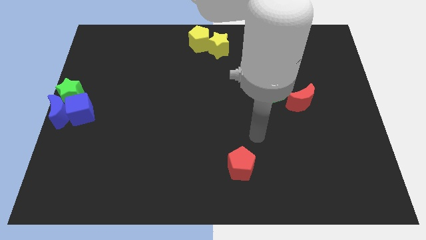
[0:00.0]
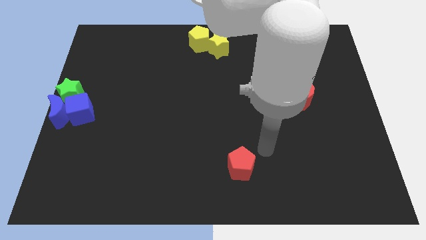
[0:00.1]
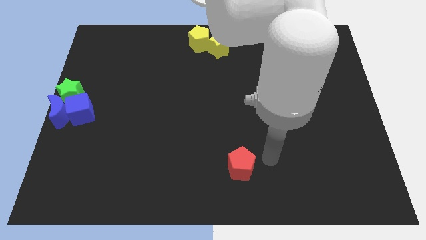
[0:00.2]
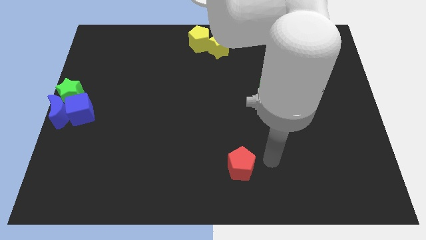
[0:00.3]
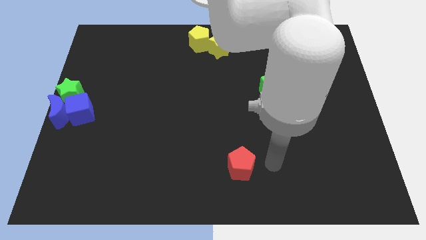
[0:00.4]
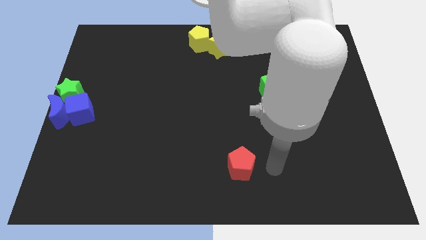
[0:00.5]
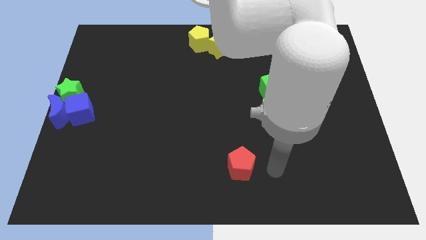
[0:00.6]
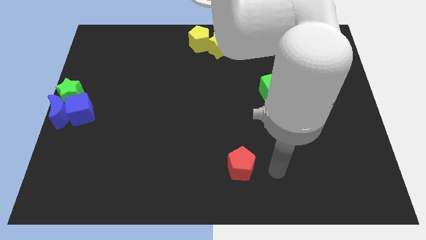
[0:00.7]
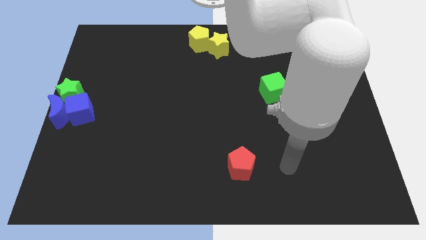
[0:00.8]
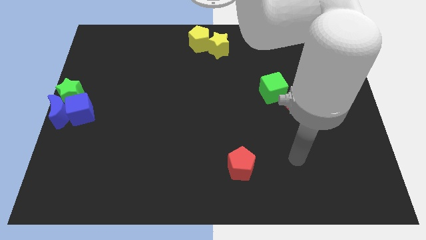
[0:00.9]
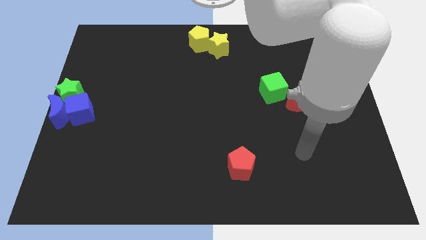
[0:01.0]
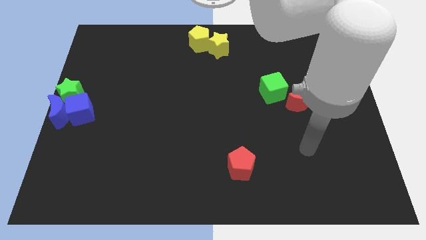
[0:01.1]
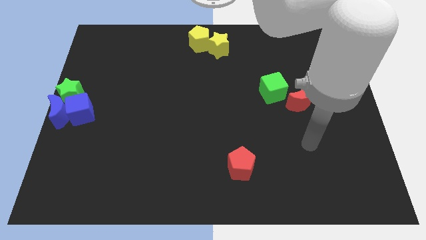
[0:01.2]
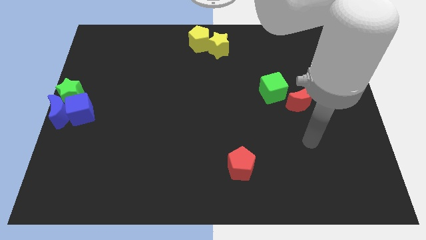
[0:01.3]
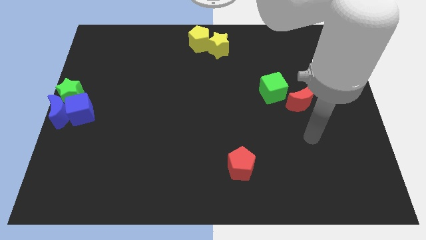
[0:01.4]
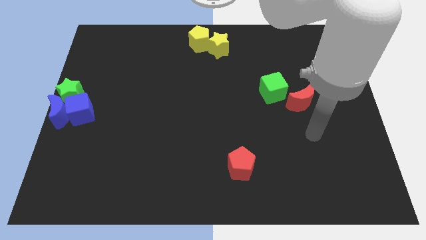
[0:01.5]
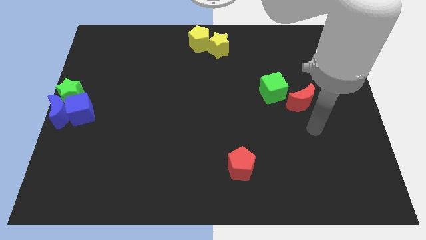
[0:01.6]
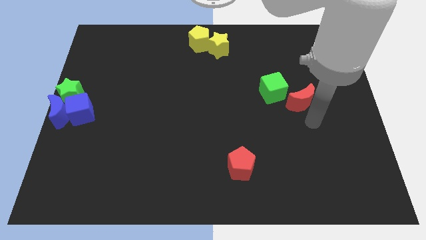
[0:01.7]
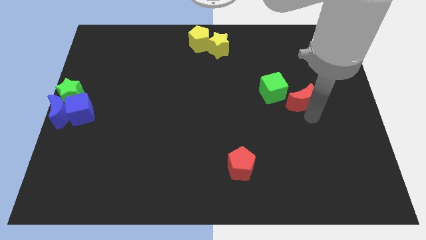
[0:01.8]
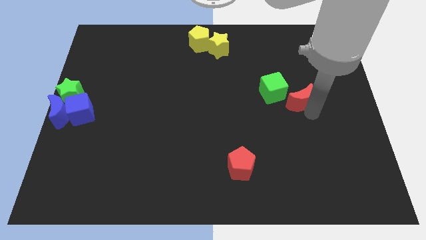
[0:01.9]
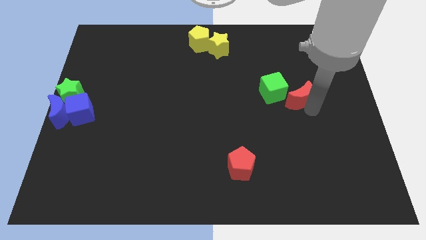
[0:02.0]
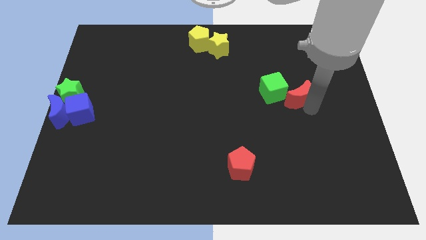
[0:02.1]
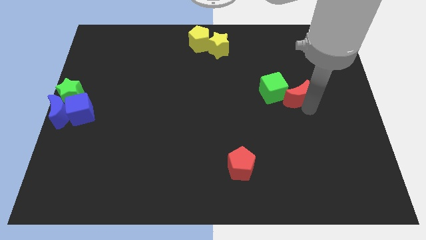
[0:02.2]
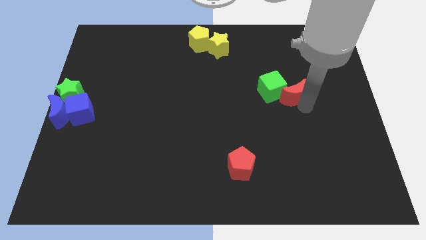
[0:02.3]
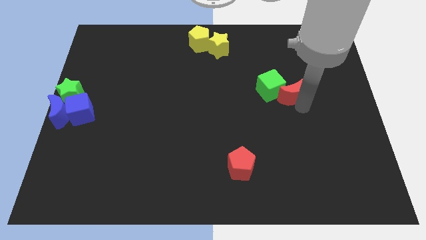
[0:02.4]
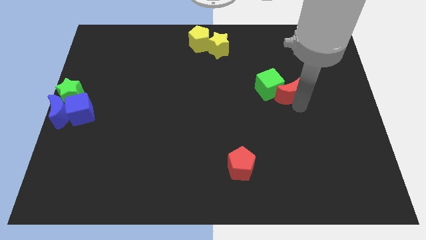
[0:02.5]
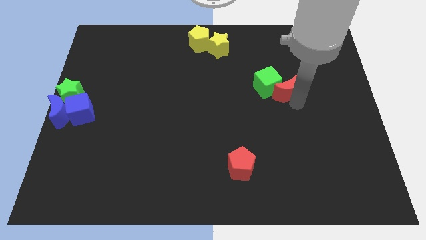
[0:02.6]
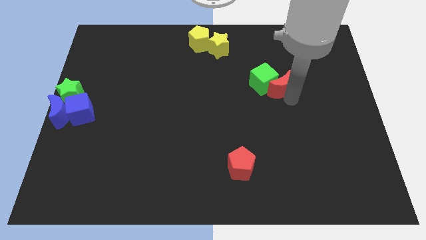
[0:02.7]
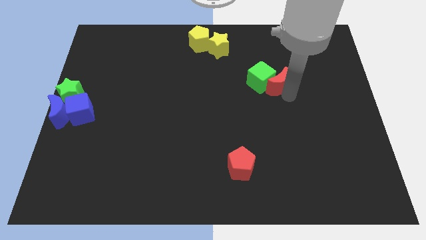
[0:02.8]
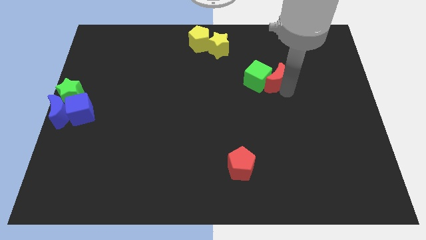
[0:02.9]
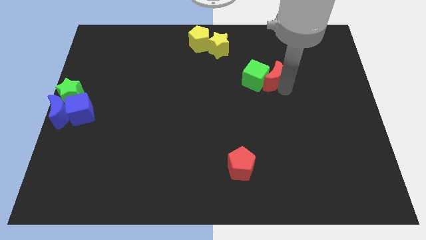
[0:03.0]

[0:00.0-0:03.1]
push green cube and red moon slightly up

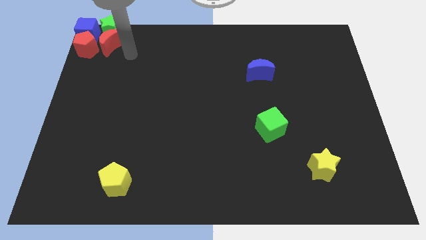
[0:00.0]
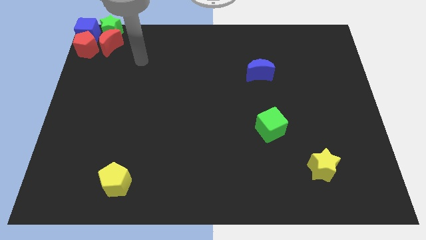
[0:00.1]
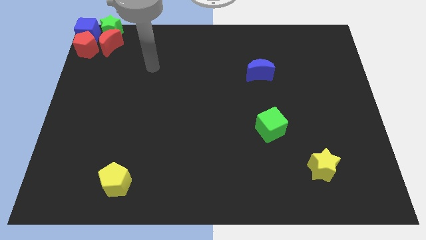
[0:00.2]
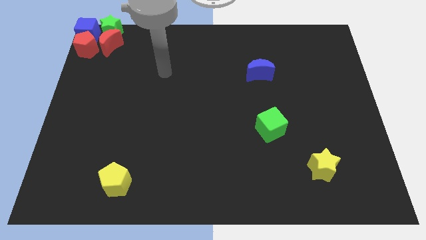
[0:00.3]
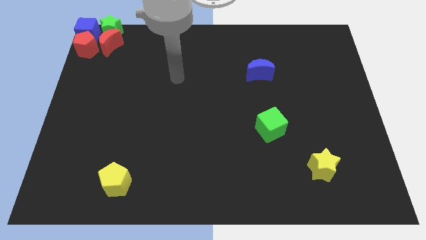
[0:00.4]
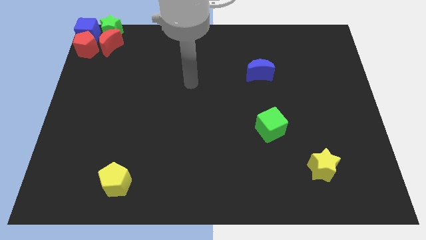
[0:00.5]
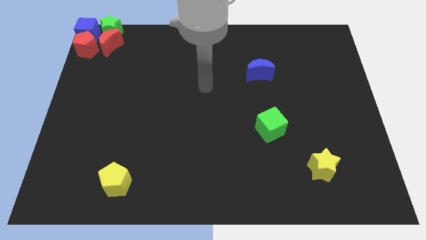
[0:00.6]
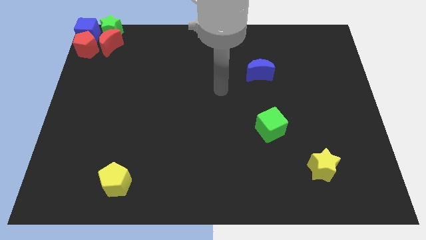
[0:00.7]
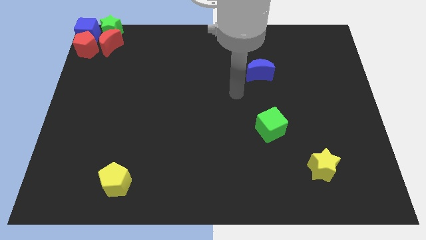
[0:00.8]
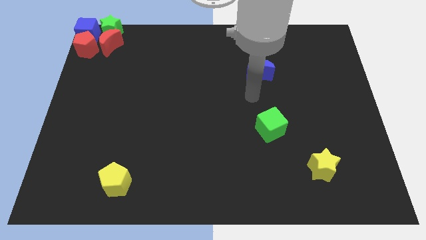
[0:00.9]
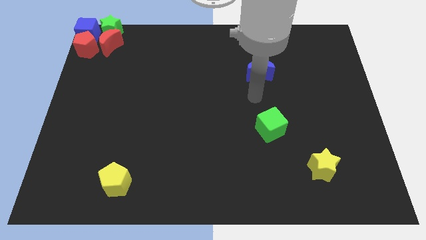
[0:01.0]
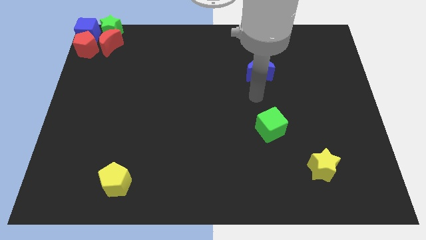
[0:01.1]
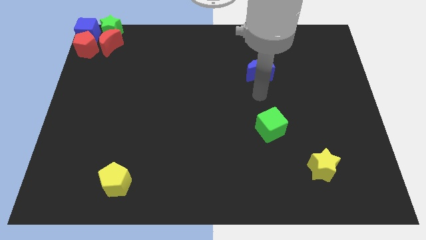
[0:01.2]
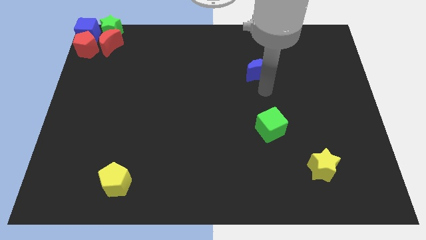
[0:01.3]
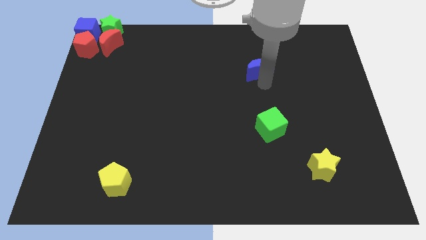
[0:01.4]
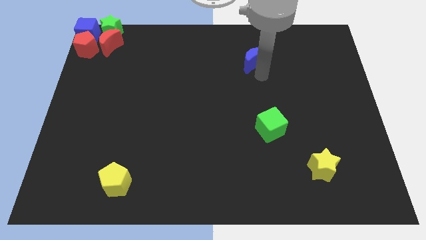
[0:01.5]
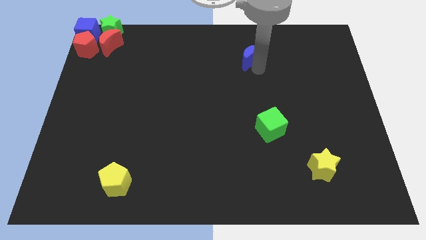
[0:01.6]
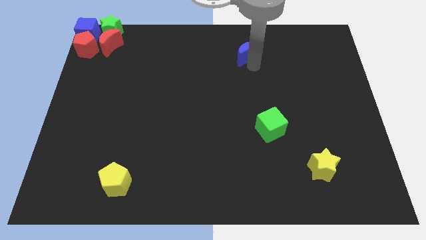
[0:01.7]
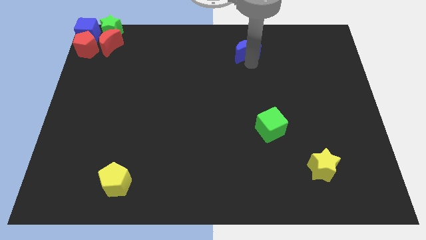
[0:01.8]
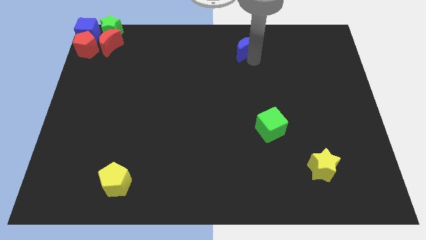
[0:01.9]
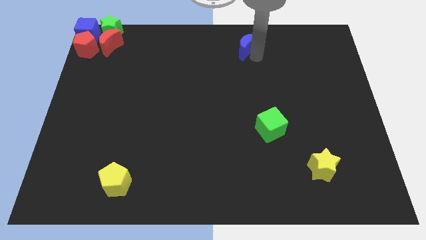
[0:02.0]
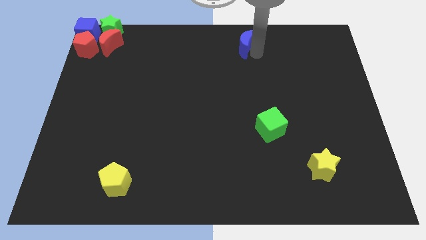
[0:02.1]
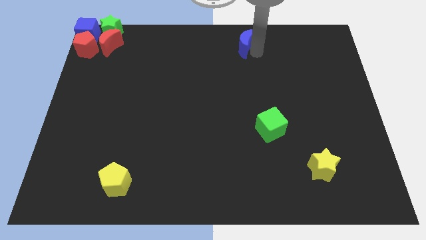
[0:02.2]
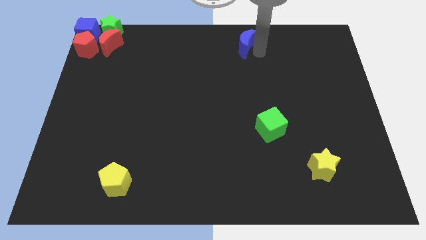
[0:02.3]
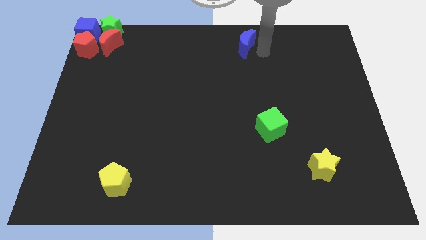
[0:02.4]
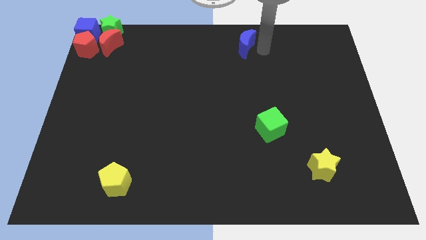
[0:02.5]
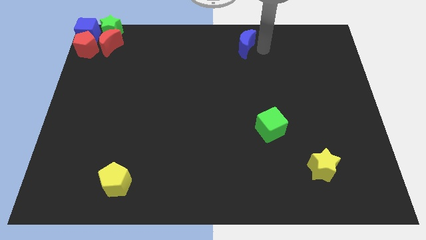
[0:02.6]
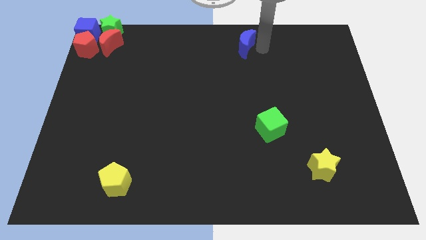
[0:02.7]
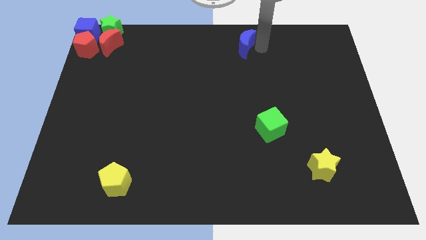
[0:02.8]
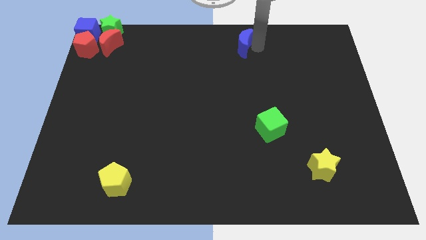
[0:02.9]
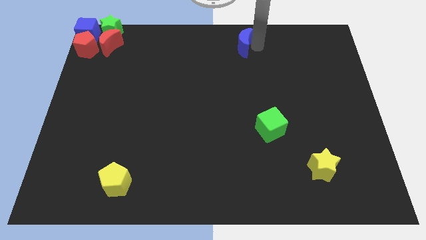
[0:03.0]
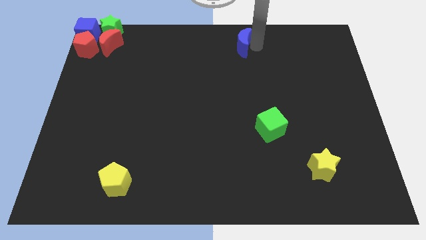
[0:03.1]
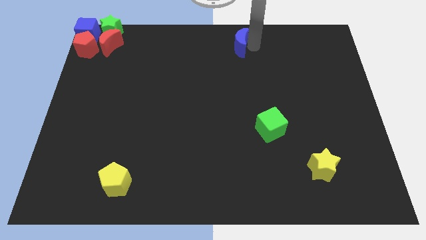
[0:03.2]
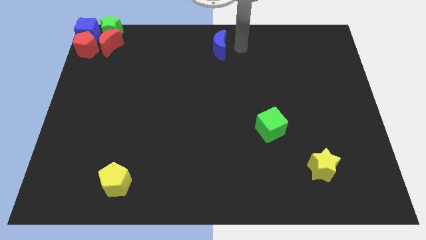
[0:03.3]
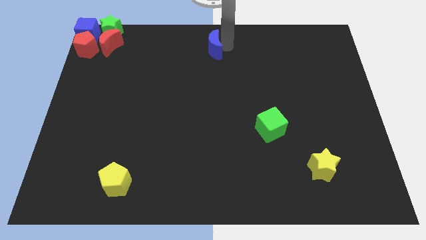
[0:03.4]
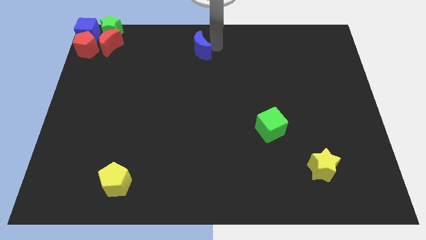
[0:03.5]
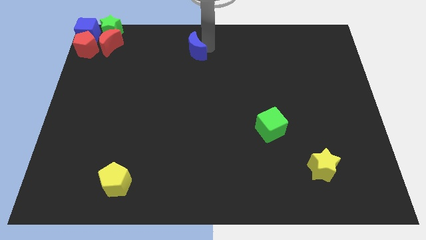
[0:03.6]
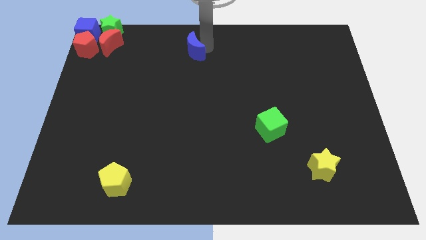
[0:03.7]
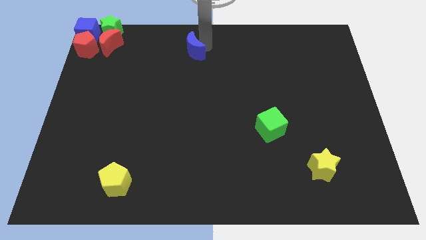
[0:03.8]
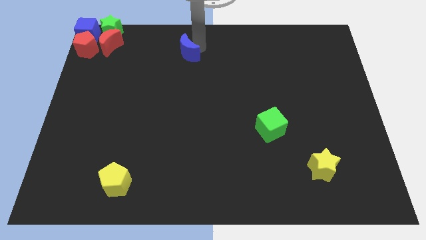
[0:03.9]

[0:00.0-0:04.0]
slide the blue moon diagonally top left to the green cube

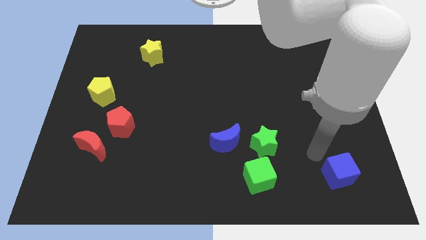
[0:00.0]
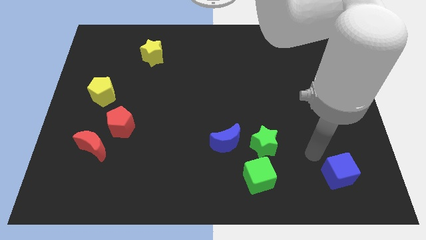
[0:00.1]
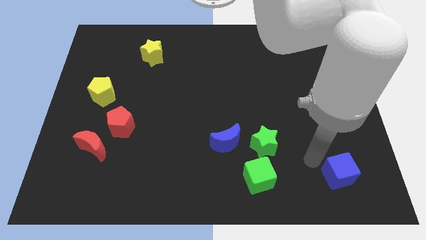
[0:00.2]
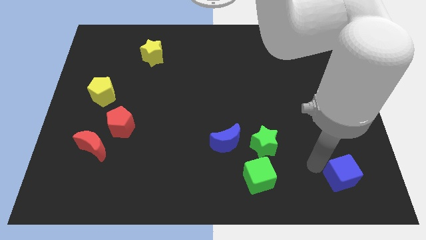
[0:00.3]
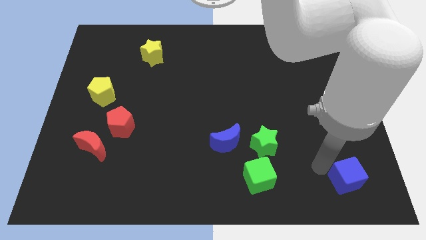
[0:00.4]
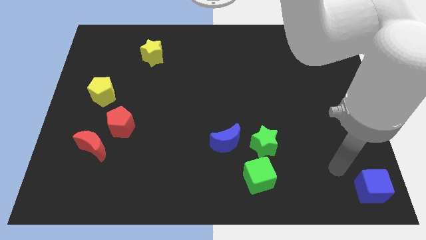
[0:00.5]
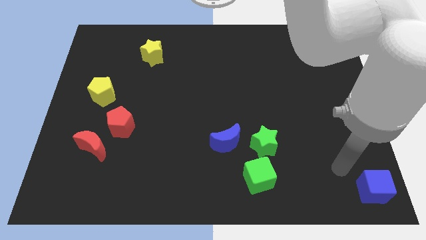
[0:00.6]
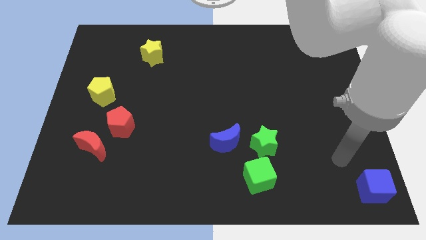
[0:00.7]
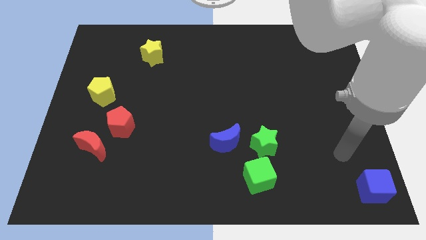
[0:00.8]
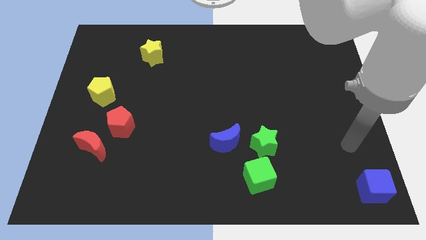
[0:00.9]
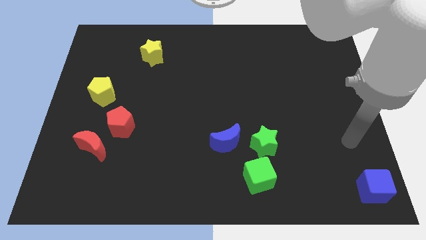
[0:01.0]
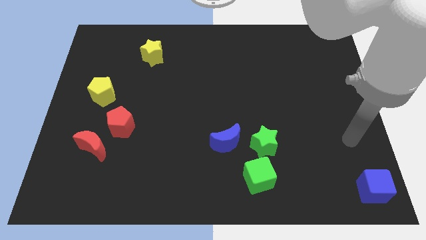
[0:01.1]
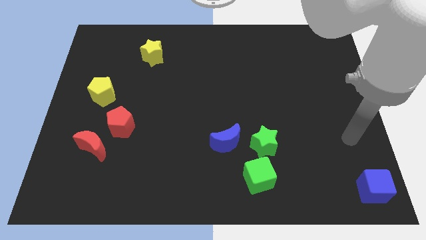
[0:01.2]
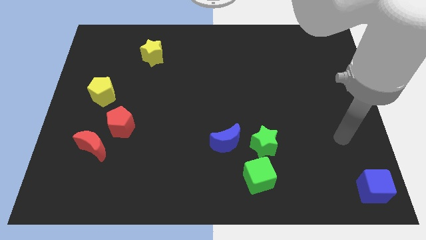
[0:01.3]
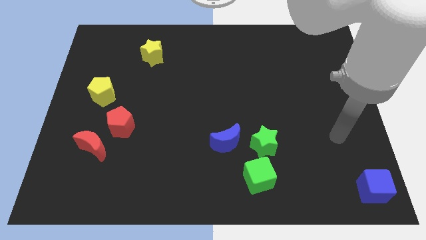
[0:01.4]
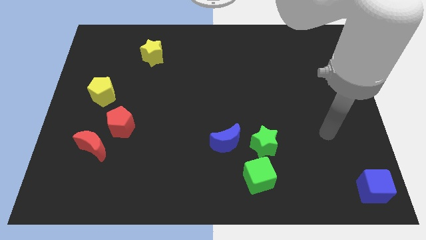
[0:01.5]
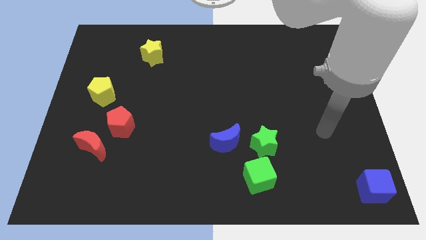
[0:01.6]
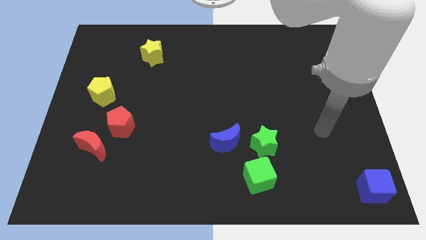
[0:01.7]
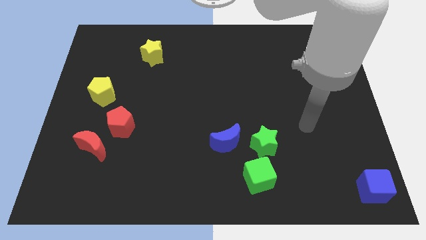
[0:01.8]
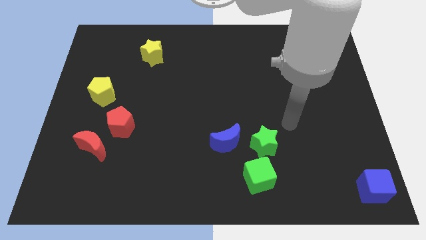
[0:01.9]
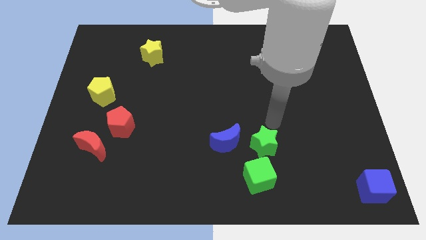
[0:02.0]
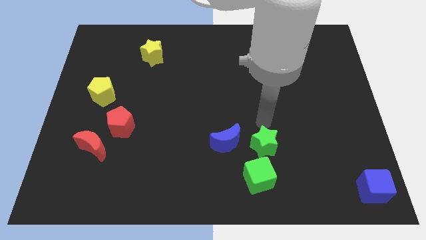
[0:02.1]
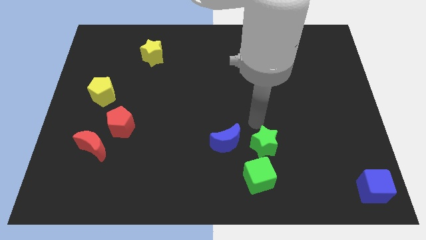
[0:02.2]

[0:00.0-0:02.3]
push the blue cube to the bottom right side
